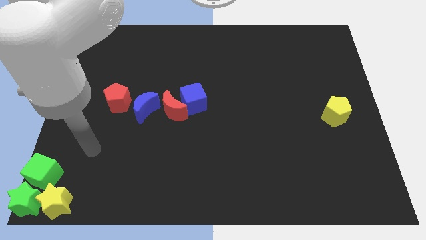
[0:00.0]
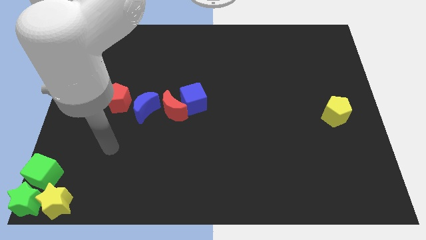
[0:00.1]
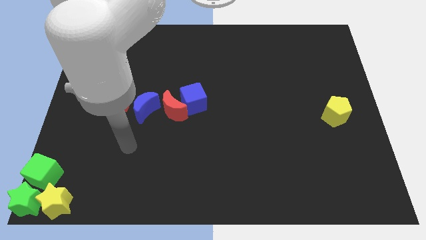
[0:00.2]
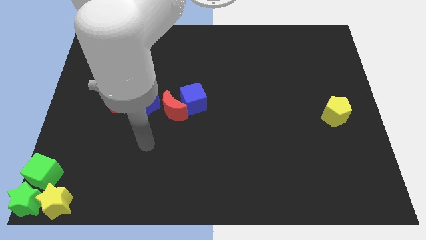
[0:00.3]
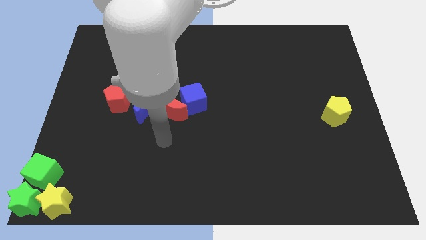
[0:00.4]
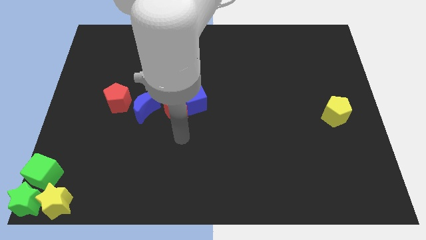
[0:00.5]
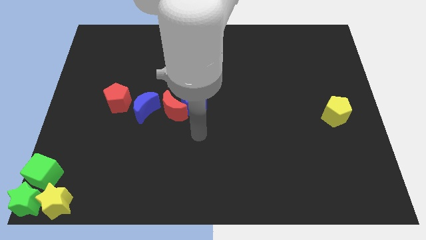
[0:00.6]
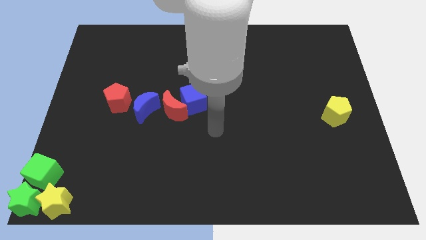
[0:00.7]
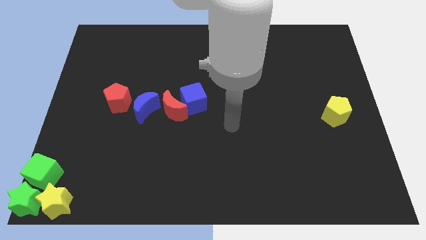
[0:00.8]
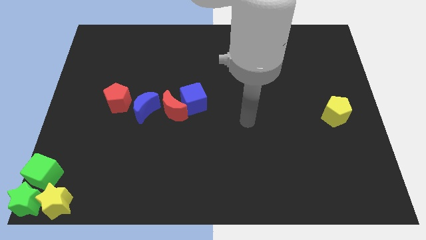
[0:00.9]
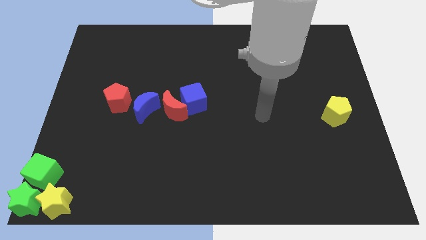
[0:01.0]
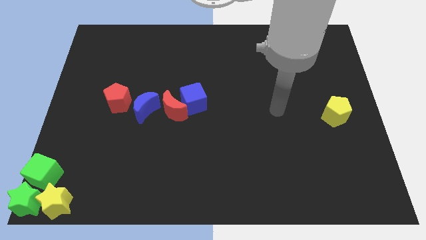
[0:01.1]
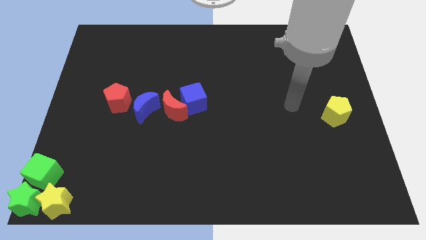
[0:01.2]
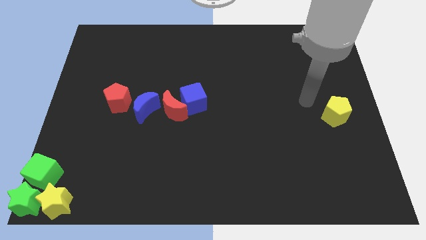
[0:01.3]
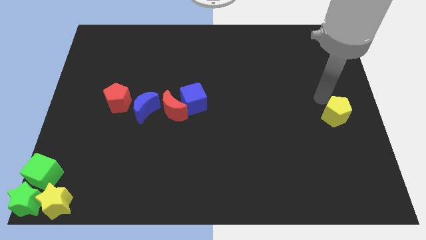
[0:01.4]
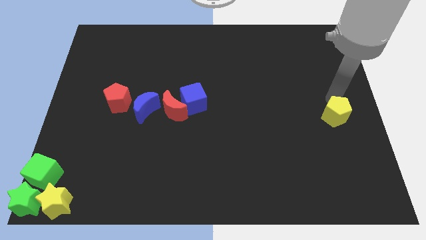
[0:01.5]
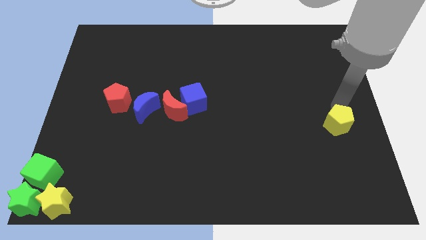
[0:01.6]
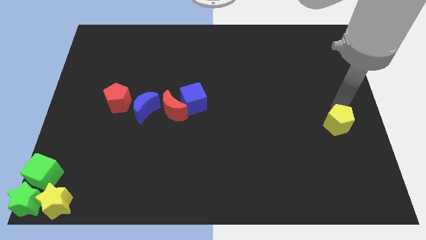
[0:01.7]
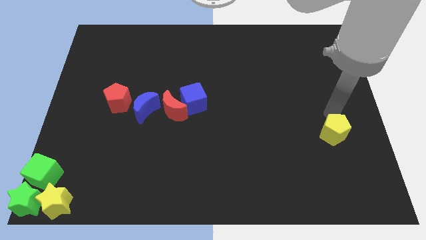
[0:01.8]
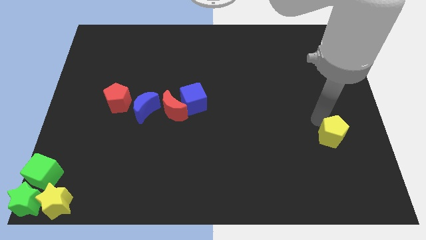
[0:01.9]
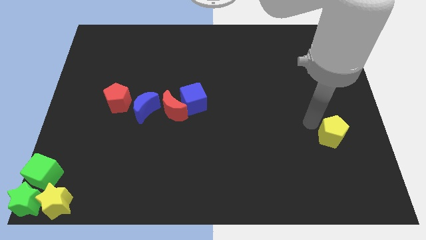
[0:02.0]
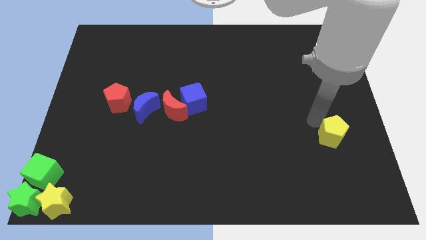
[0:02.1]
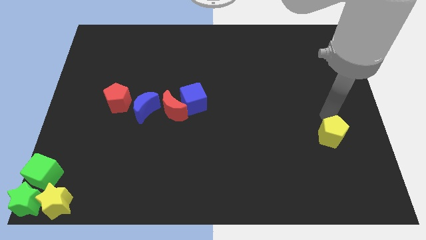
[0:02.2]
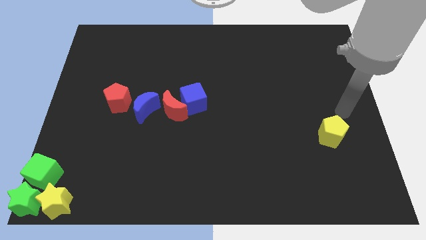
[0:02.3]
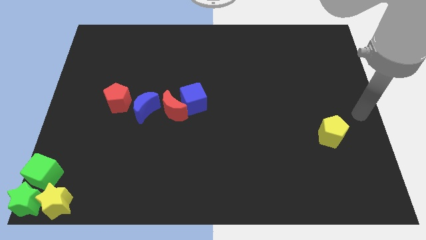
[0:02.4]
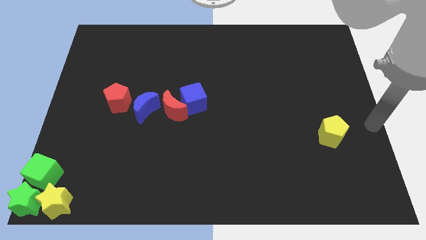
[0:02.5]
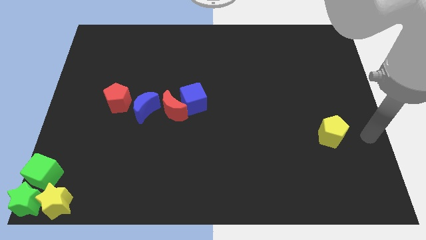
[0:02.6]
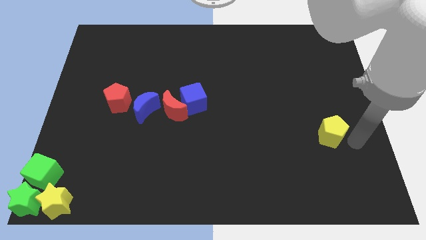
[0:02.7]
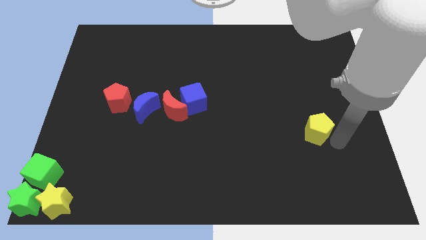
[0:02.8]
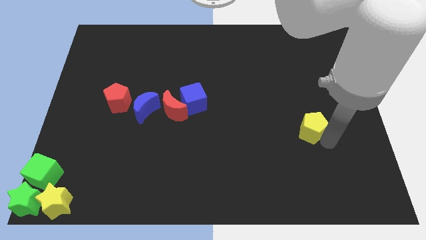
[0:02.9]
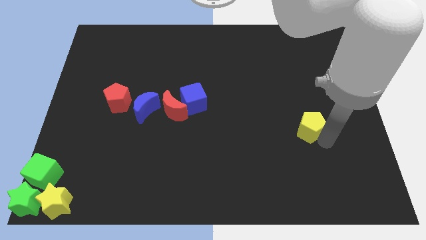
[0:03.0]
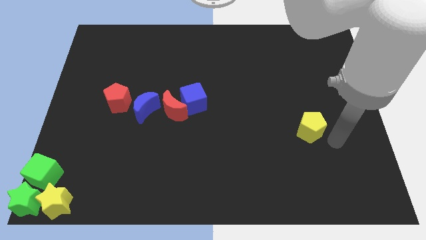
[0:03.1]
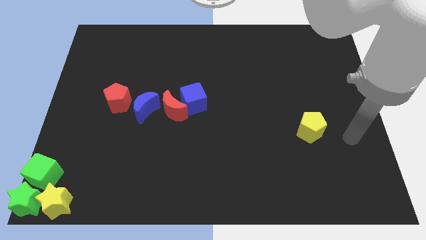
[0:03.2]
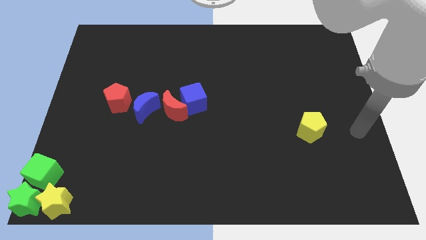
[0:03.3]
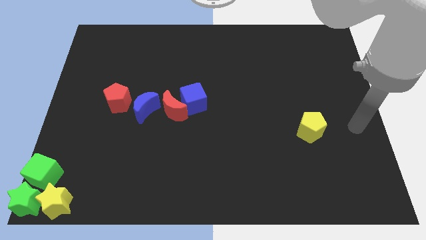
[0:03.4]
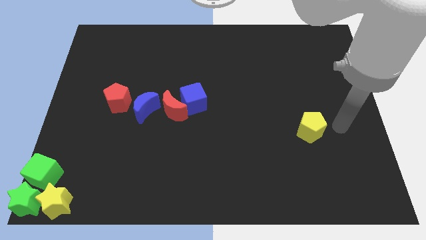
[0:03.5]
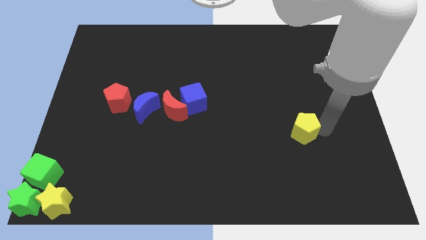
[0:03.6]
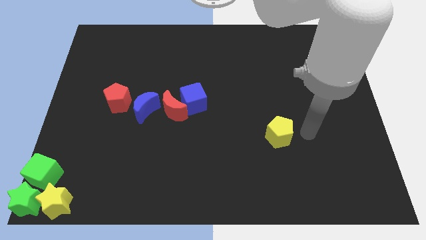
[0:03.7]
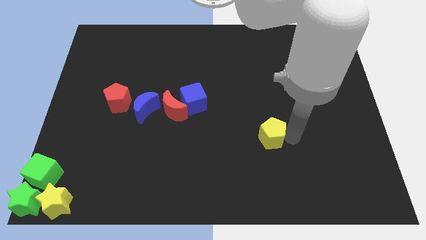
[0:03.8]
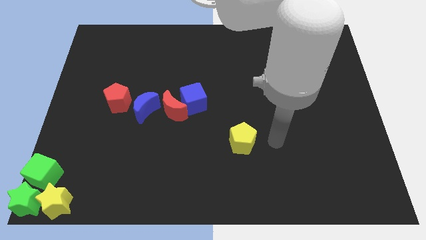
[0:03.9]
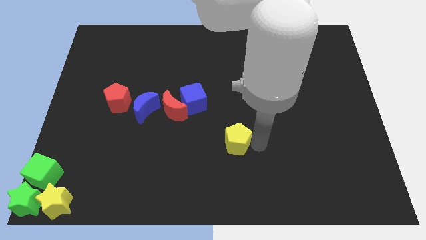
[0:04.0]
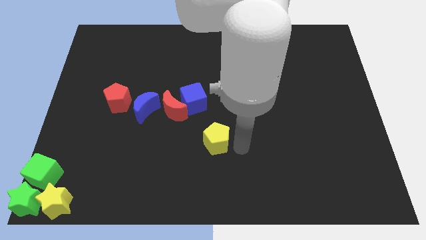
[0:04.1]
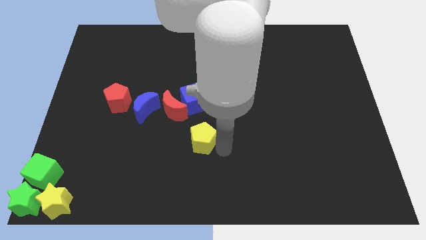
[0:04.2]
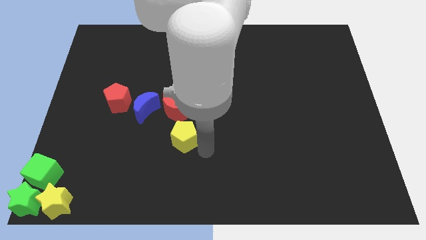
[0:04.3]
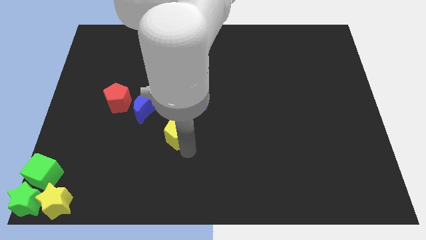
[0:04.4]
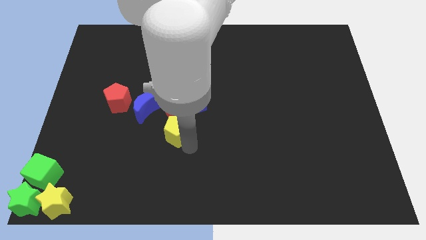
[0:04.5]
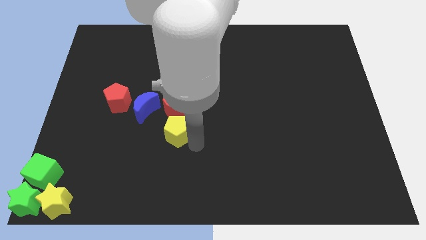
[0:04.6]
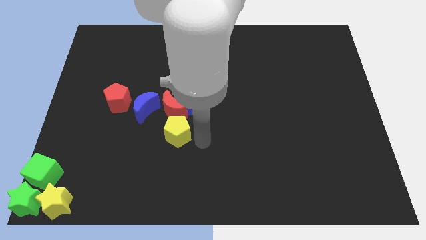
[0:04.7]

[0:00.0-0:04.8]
place the yellow pentagon below the red crescent

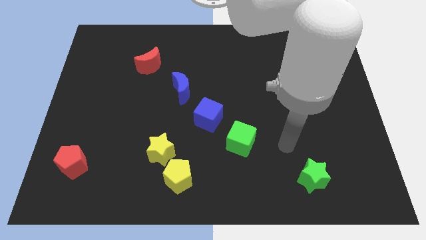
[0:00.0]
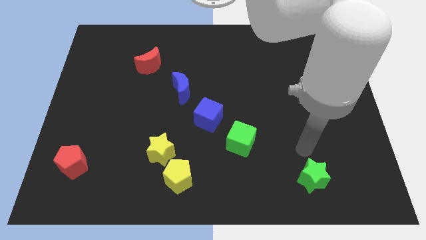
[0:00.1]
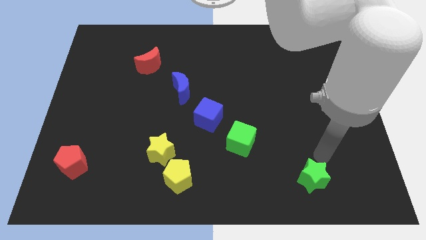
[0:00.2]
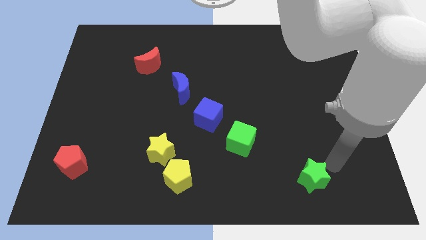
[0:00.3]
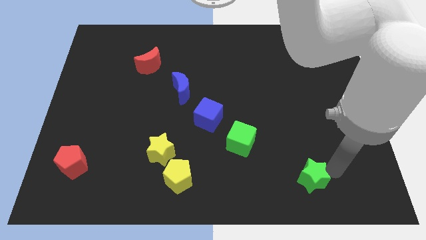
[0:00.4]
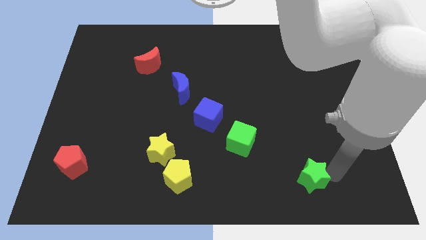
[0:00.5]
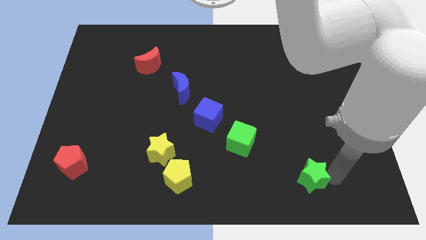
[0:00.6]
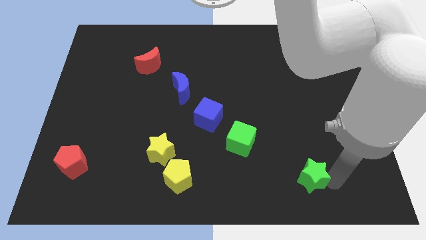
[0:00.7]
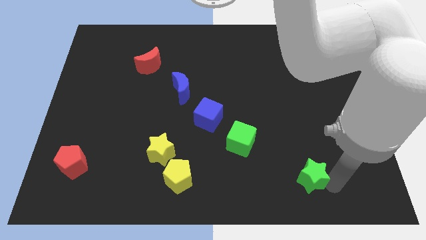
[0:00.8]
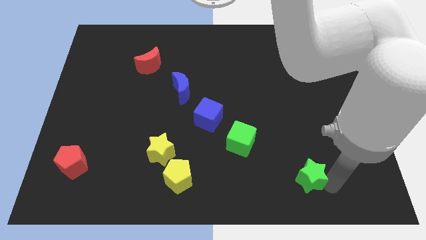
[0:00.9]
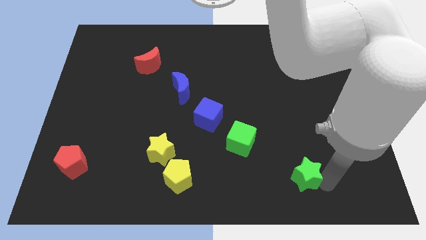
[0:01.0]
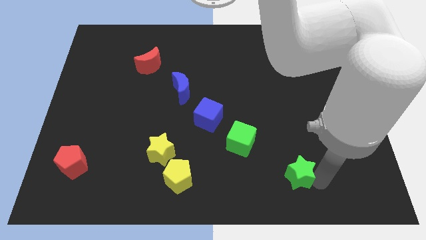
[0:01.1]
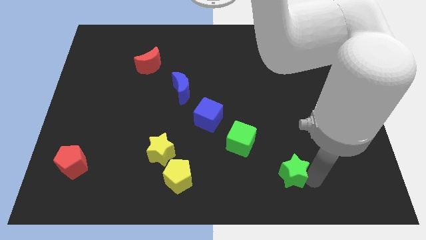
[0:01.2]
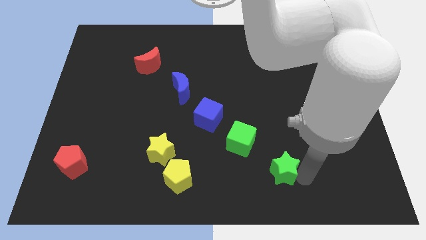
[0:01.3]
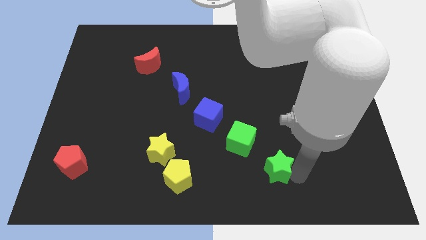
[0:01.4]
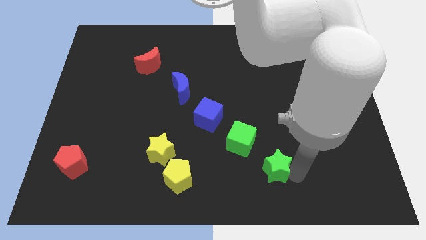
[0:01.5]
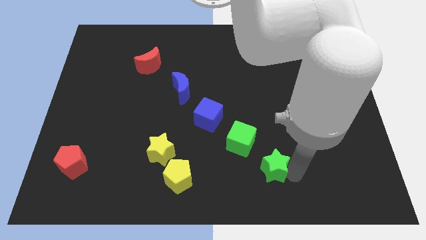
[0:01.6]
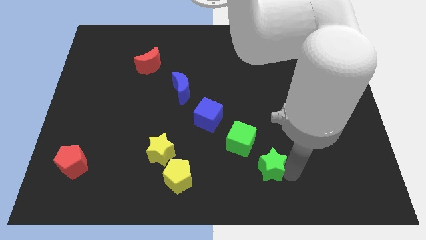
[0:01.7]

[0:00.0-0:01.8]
put the green star diagonally on the bottom right side of the green cube

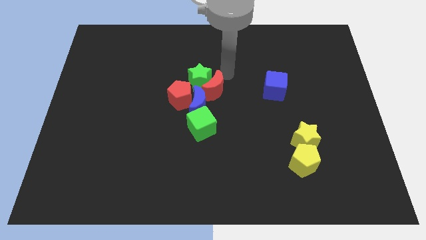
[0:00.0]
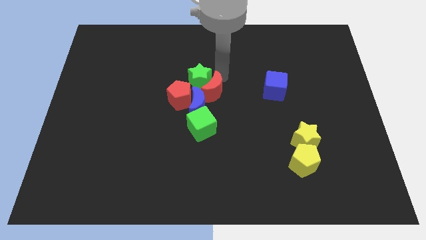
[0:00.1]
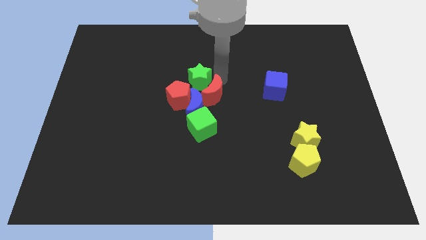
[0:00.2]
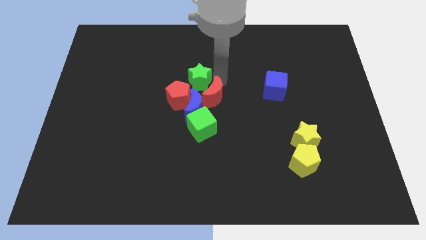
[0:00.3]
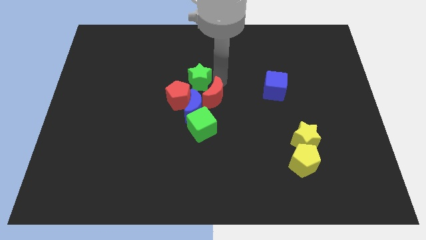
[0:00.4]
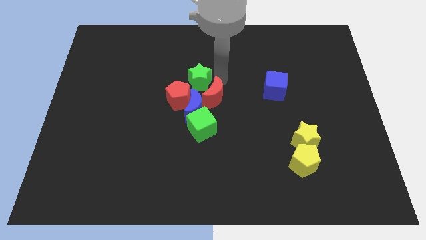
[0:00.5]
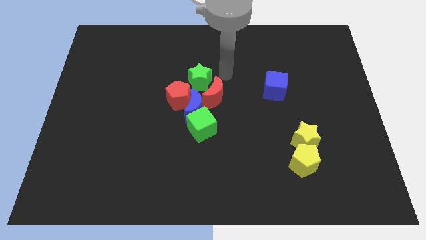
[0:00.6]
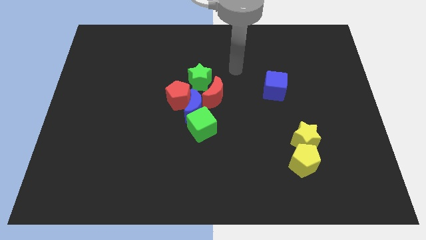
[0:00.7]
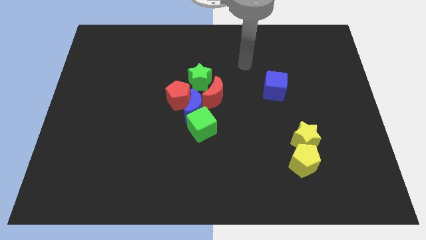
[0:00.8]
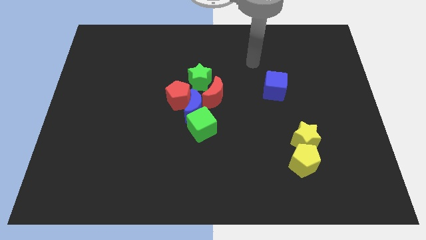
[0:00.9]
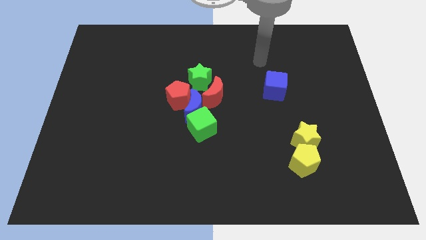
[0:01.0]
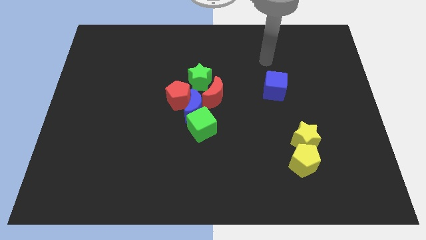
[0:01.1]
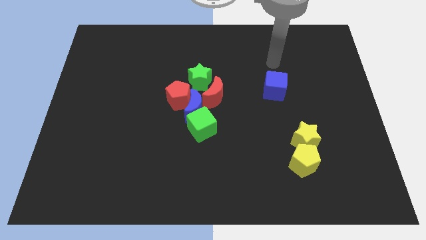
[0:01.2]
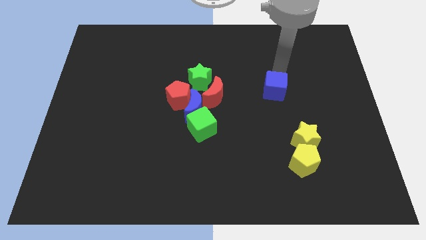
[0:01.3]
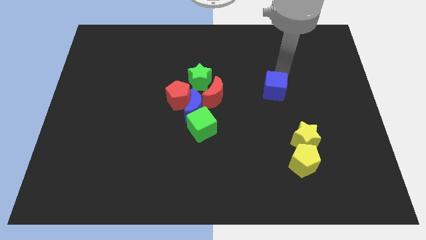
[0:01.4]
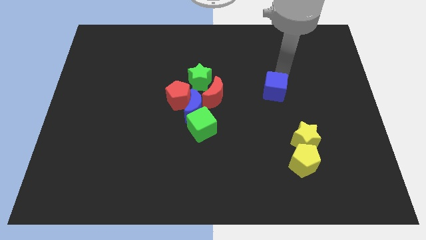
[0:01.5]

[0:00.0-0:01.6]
point your arm at the top of blue cube

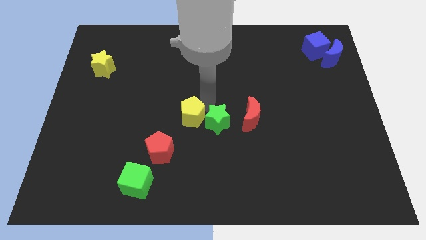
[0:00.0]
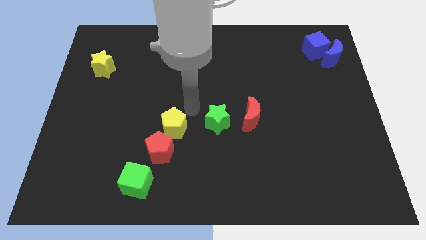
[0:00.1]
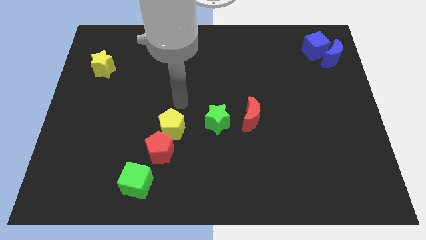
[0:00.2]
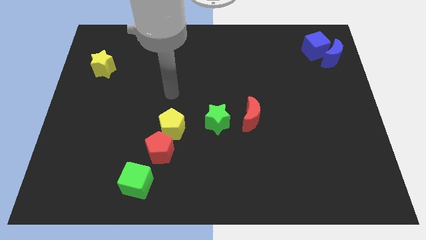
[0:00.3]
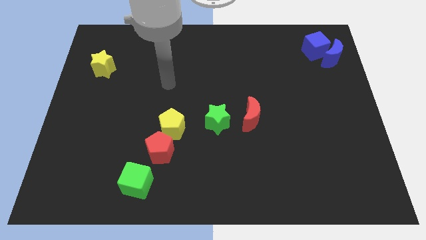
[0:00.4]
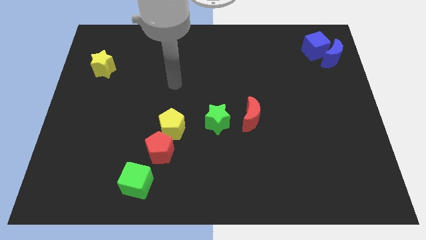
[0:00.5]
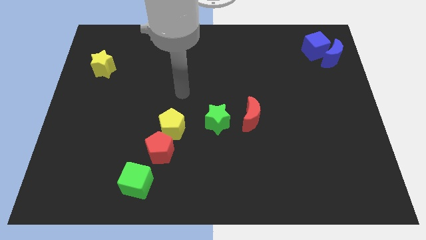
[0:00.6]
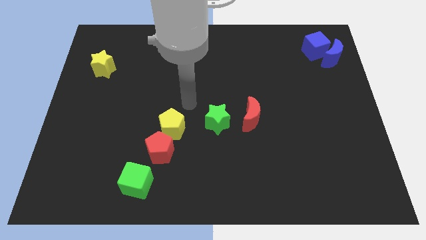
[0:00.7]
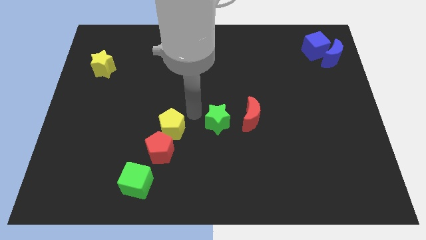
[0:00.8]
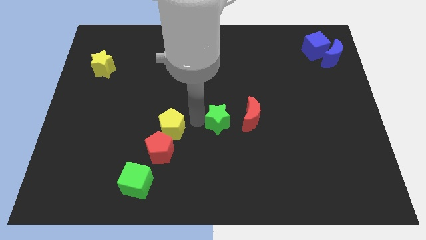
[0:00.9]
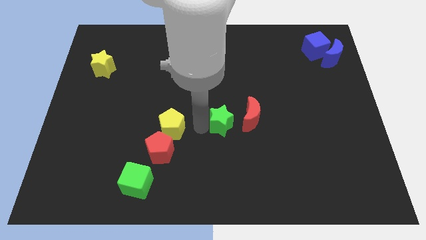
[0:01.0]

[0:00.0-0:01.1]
separate the yellow pentagon from the green star
